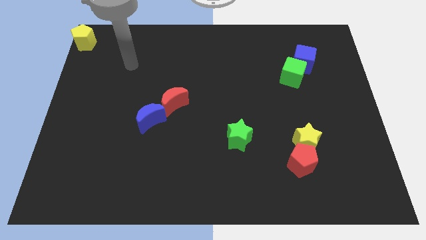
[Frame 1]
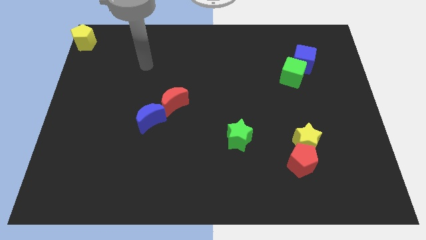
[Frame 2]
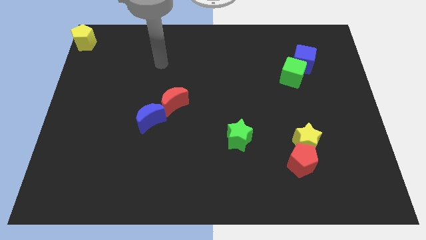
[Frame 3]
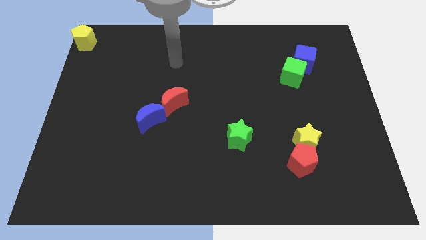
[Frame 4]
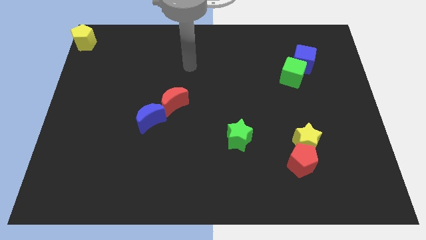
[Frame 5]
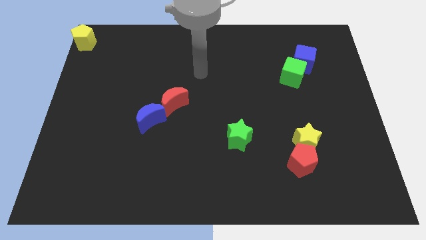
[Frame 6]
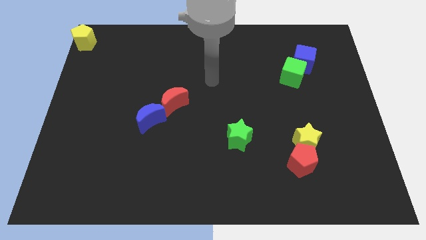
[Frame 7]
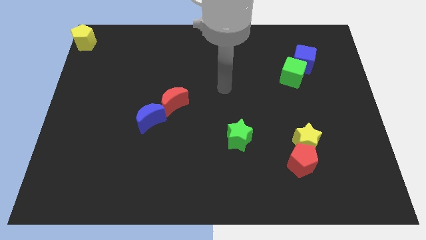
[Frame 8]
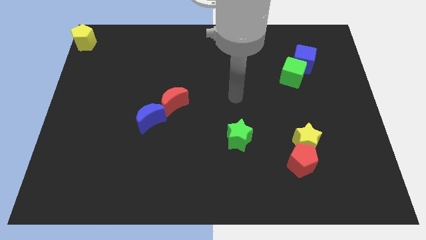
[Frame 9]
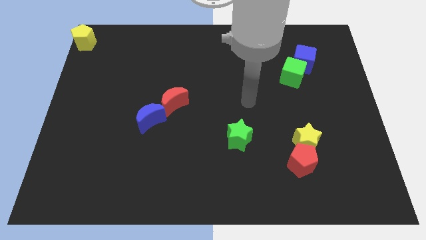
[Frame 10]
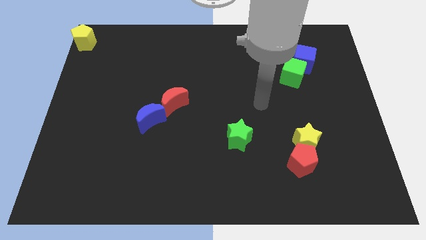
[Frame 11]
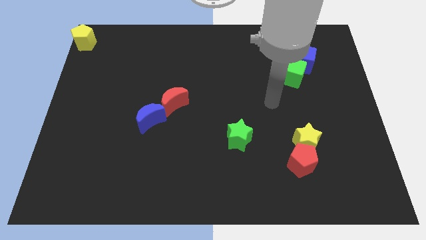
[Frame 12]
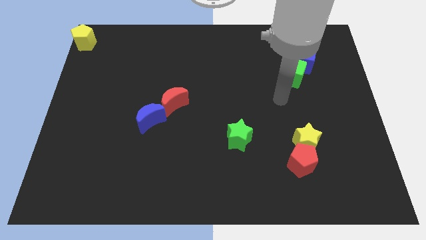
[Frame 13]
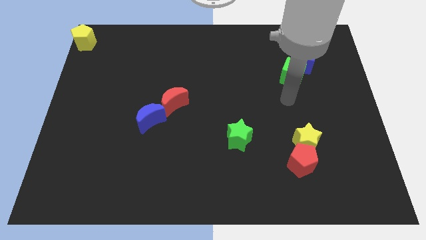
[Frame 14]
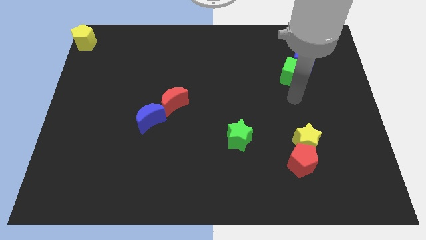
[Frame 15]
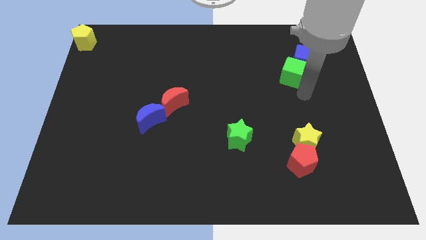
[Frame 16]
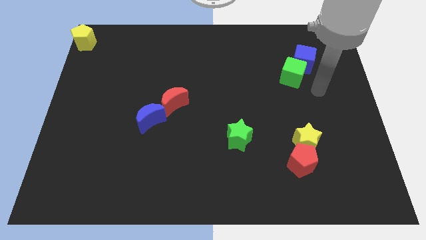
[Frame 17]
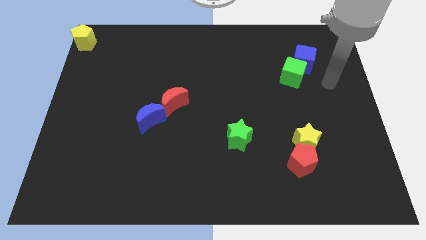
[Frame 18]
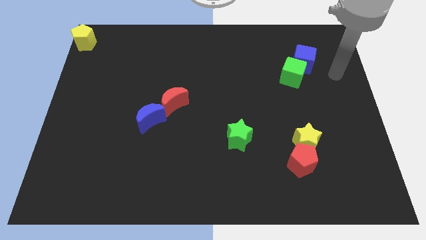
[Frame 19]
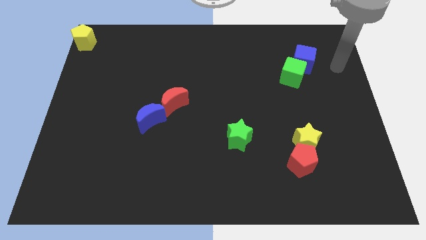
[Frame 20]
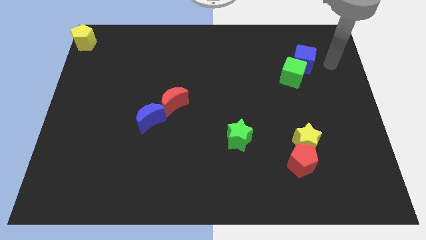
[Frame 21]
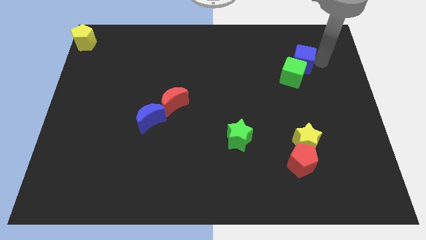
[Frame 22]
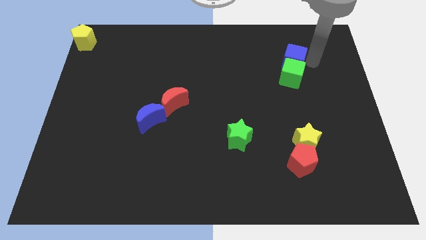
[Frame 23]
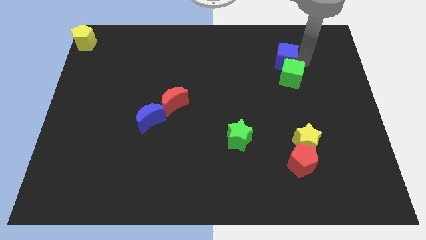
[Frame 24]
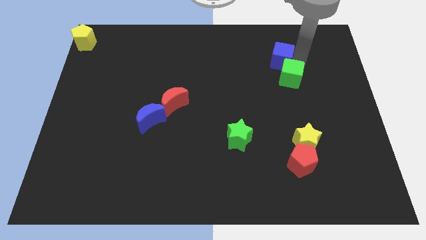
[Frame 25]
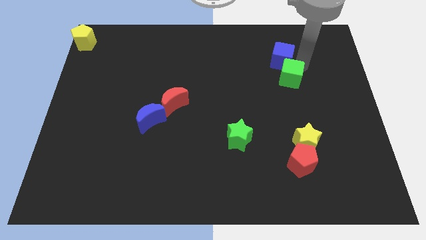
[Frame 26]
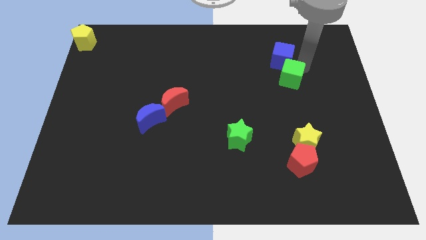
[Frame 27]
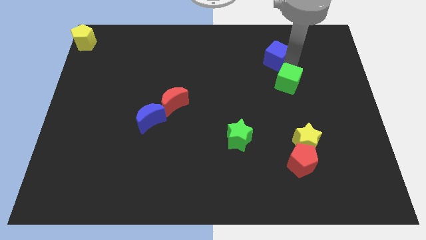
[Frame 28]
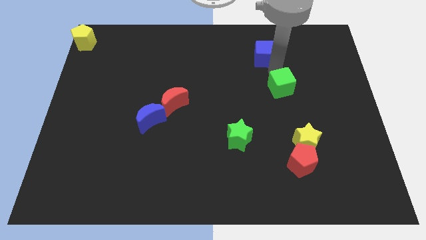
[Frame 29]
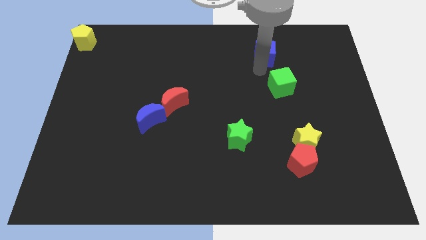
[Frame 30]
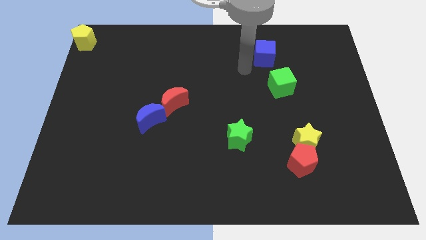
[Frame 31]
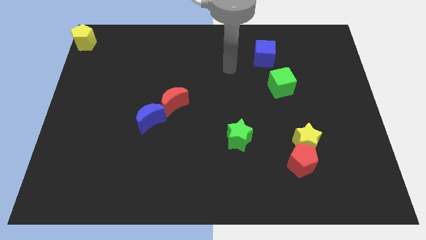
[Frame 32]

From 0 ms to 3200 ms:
seperate green cube and the blue cube

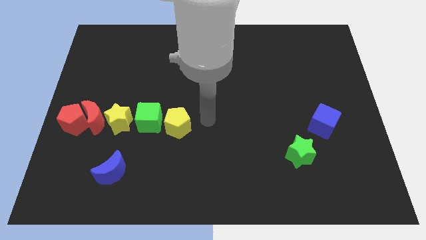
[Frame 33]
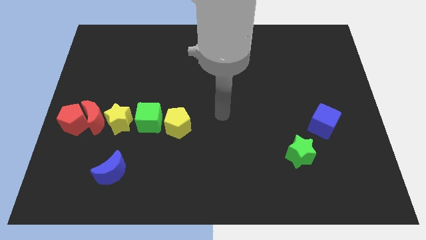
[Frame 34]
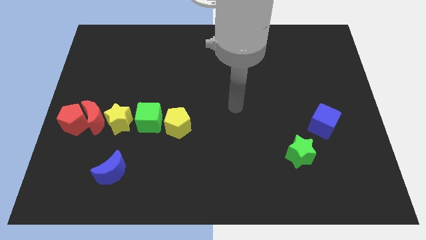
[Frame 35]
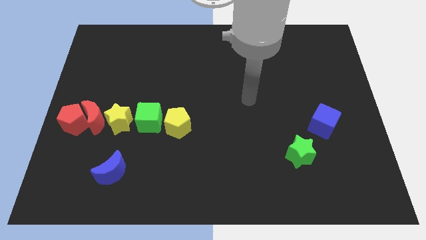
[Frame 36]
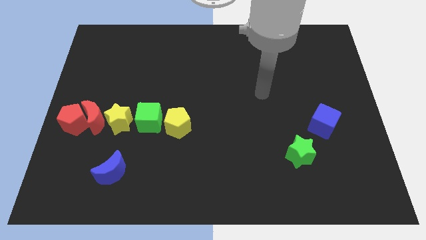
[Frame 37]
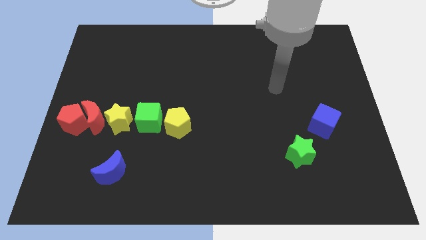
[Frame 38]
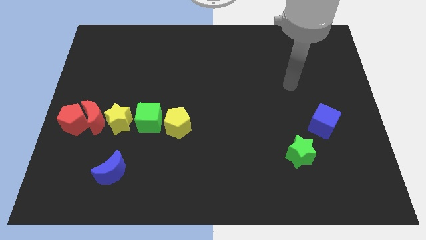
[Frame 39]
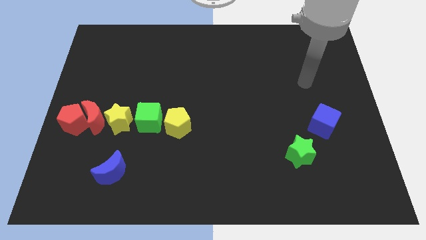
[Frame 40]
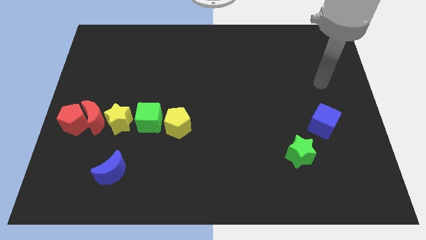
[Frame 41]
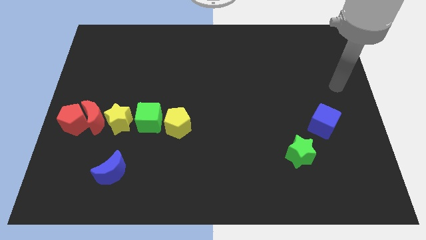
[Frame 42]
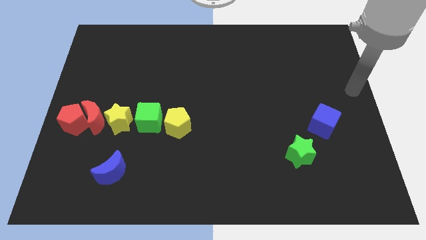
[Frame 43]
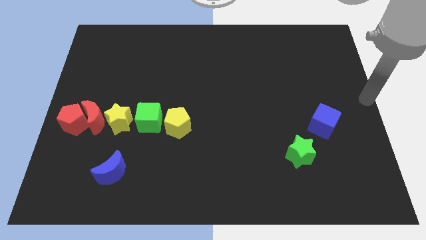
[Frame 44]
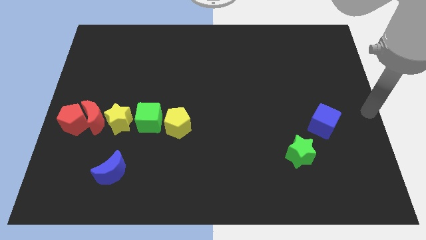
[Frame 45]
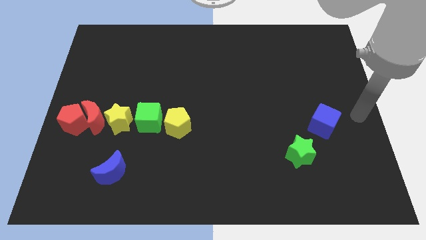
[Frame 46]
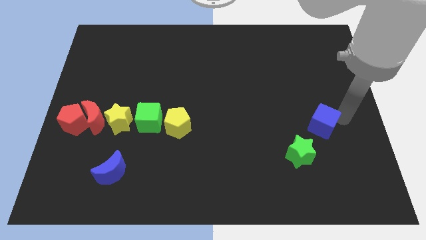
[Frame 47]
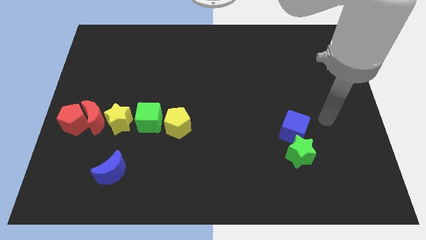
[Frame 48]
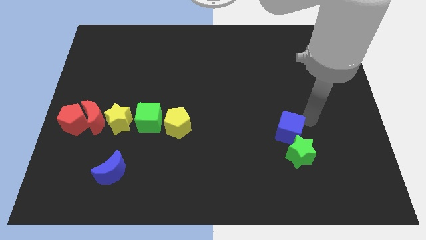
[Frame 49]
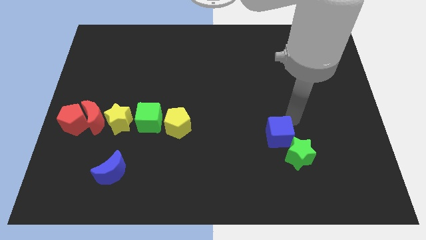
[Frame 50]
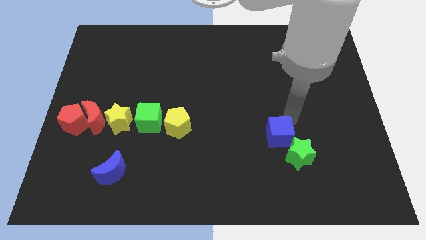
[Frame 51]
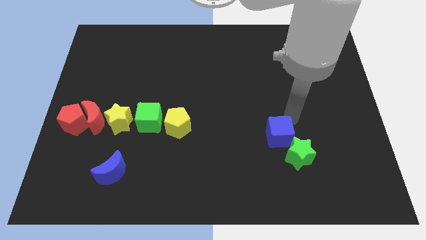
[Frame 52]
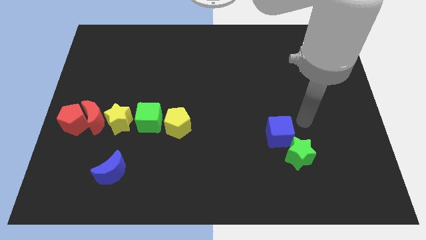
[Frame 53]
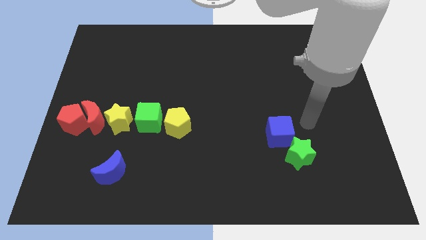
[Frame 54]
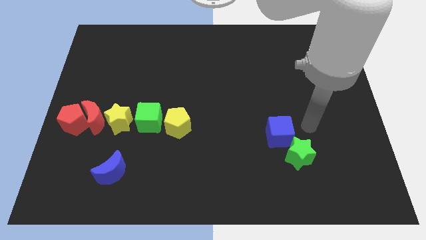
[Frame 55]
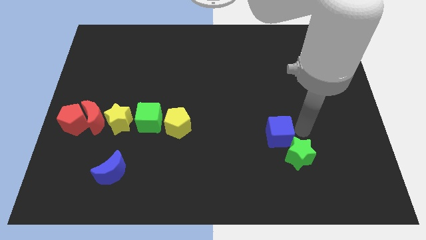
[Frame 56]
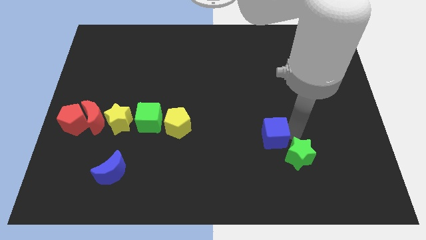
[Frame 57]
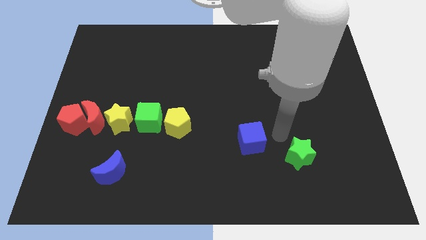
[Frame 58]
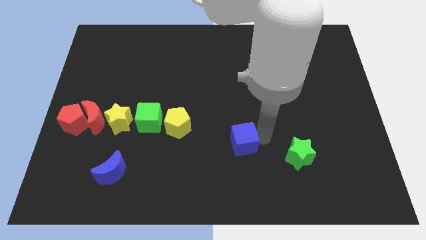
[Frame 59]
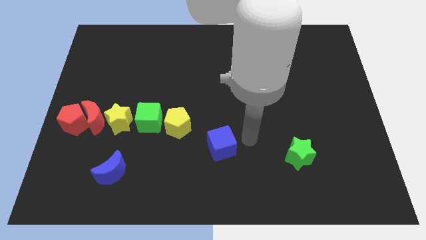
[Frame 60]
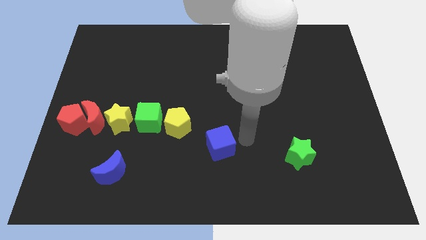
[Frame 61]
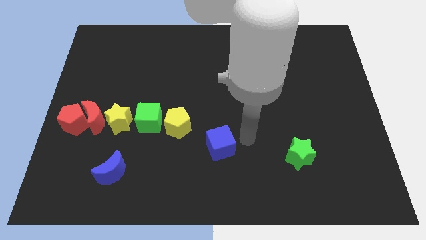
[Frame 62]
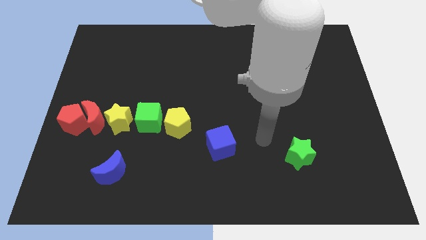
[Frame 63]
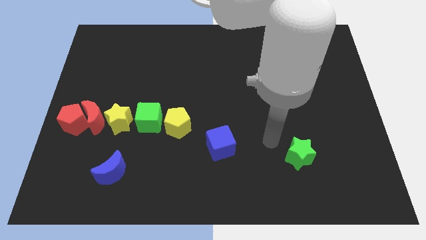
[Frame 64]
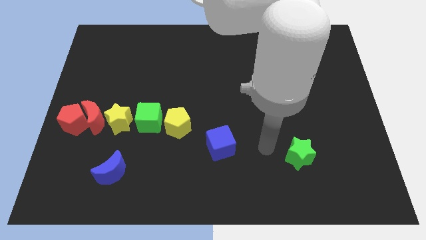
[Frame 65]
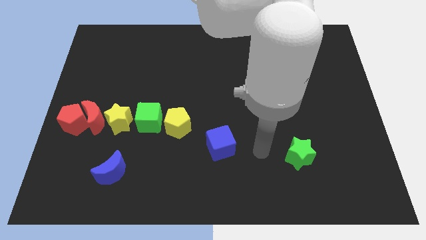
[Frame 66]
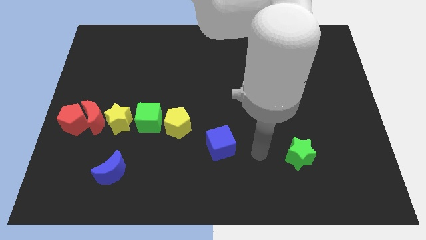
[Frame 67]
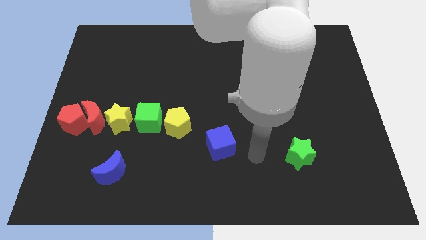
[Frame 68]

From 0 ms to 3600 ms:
push the blue cube horizontally to the left side of the green star

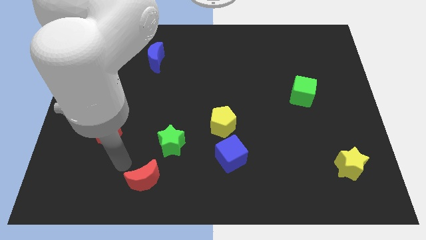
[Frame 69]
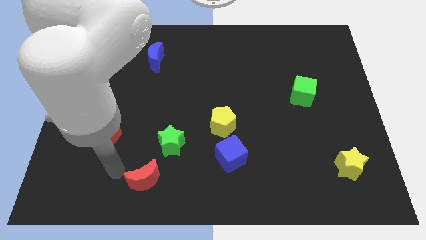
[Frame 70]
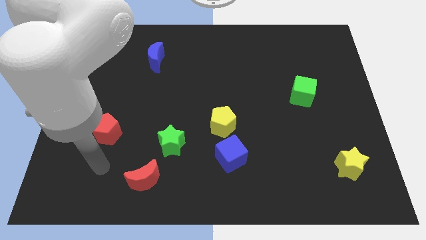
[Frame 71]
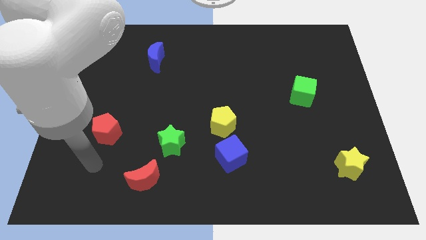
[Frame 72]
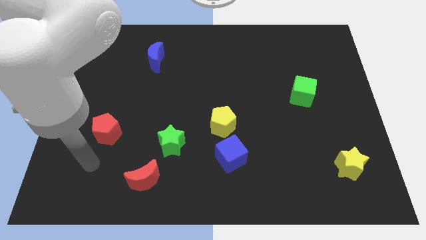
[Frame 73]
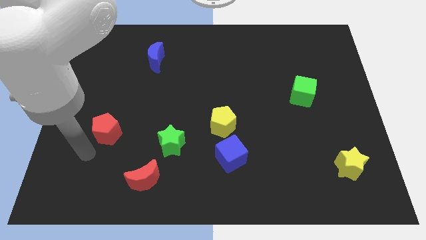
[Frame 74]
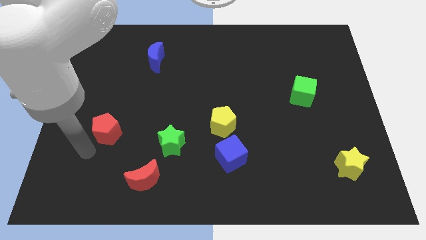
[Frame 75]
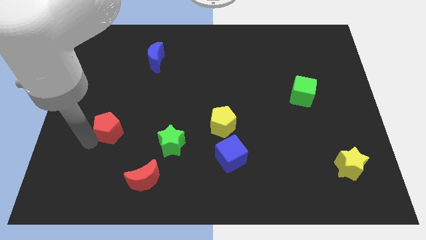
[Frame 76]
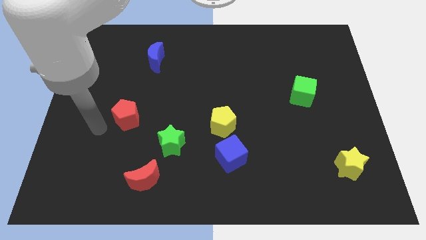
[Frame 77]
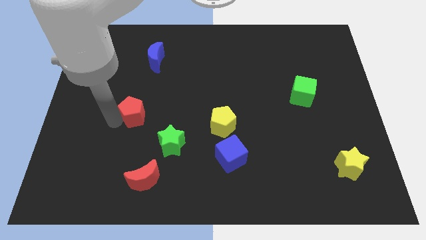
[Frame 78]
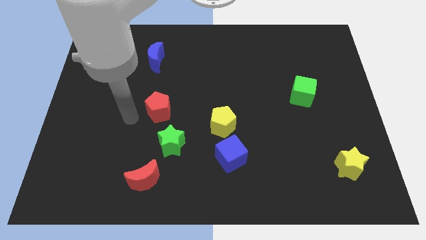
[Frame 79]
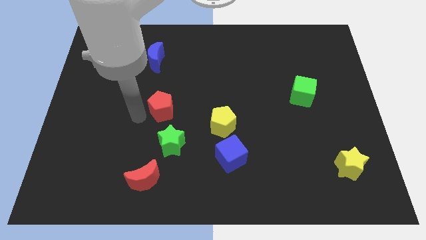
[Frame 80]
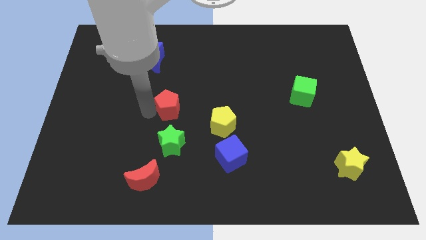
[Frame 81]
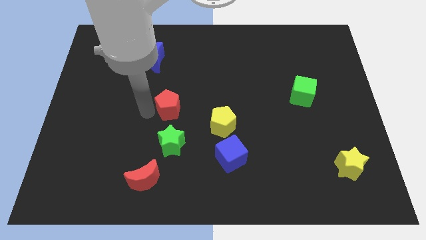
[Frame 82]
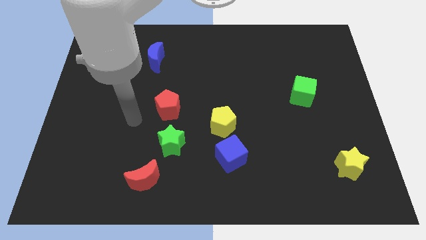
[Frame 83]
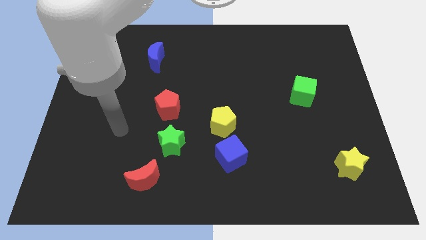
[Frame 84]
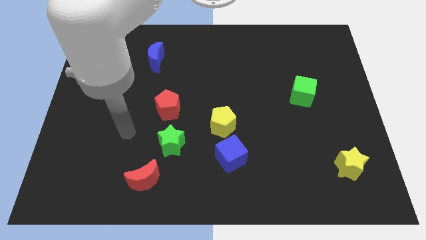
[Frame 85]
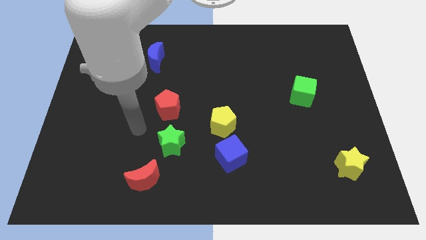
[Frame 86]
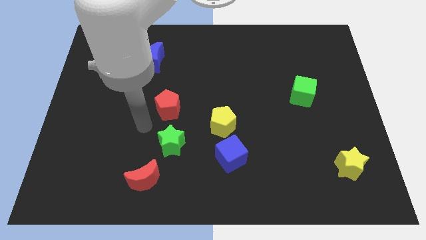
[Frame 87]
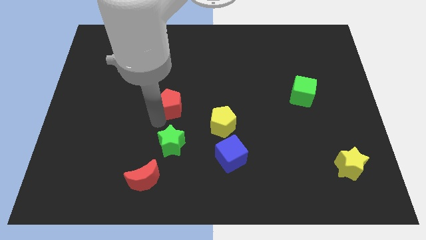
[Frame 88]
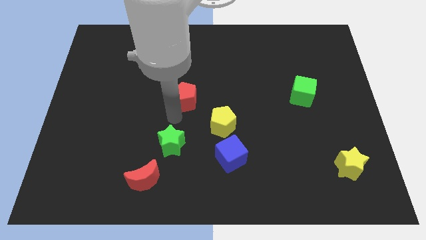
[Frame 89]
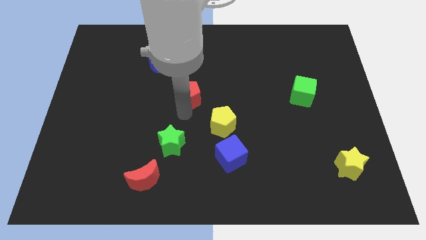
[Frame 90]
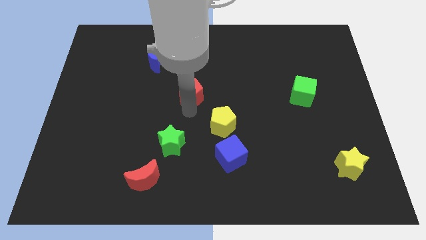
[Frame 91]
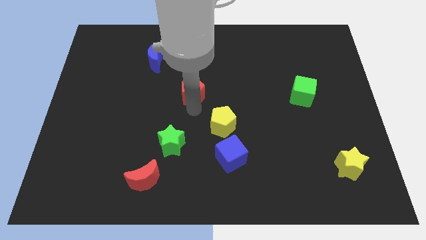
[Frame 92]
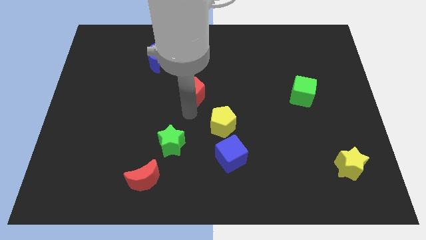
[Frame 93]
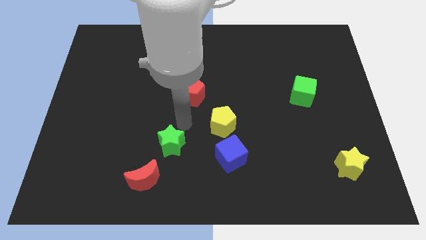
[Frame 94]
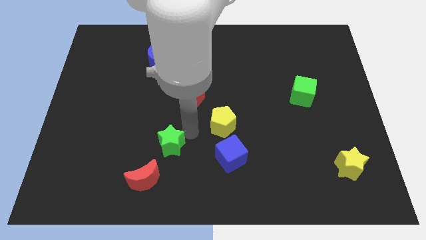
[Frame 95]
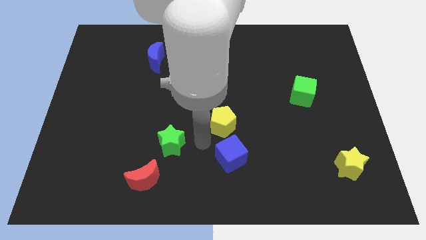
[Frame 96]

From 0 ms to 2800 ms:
push the red pentagon to the center of the board
